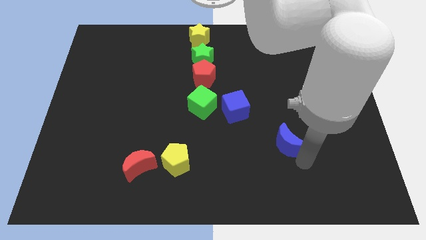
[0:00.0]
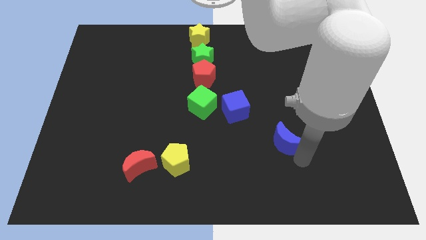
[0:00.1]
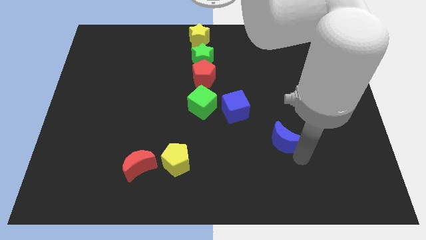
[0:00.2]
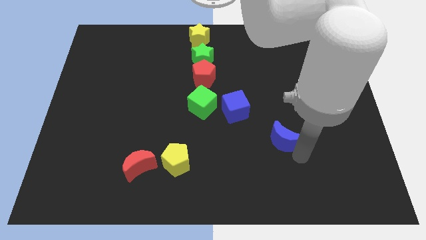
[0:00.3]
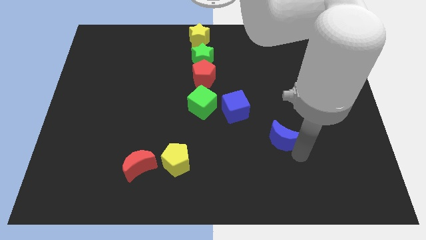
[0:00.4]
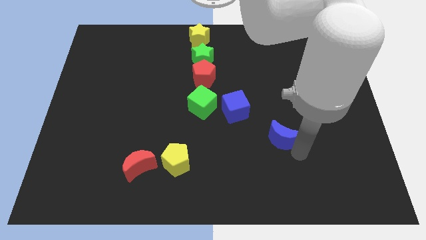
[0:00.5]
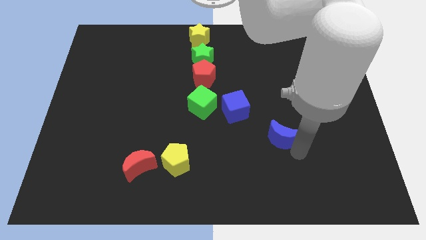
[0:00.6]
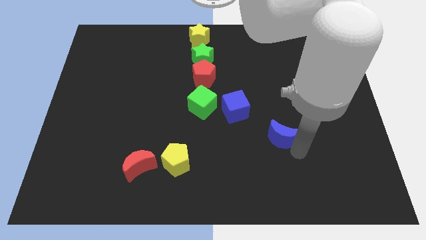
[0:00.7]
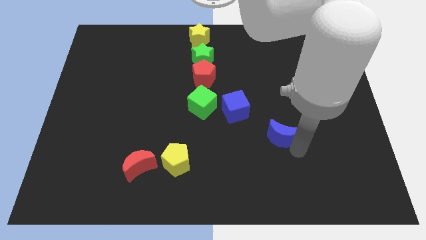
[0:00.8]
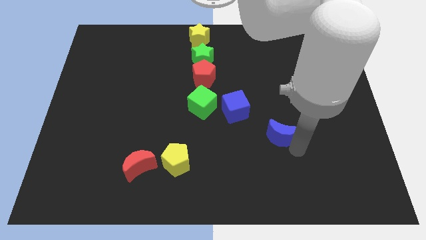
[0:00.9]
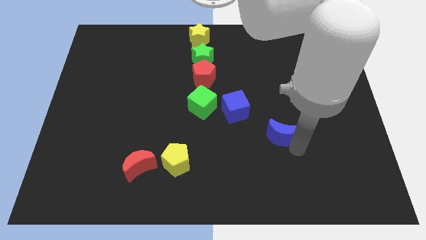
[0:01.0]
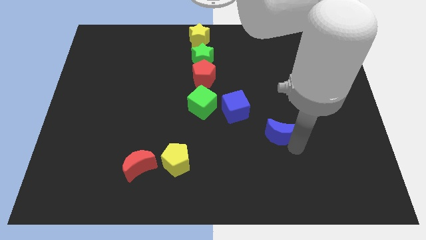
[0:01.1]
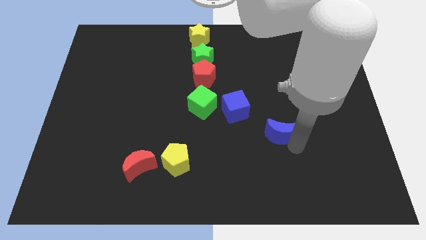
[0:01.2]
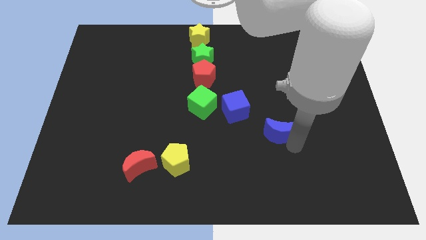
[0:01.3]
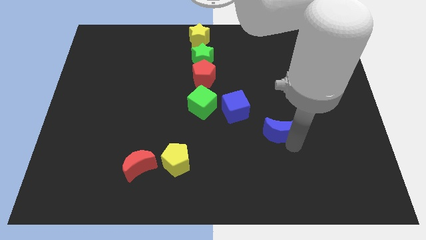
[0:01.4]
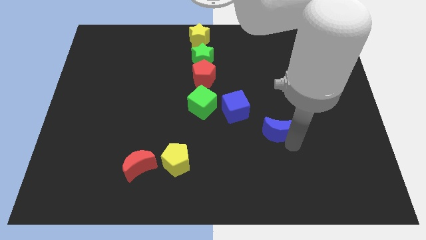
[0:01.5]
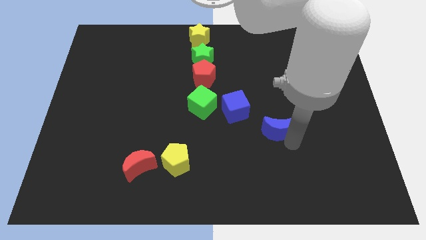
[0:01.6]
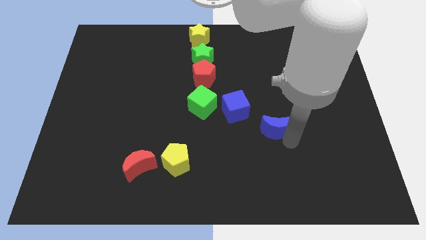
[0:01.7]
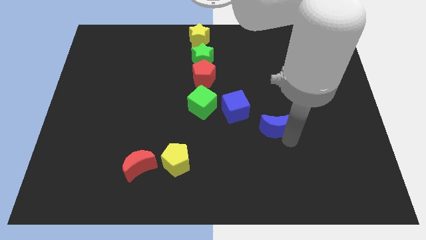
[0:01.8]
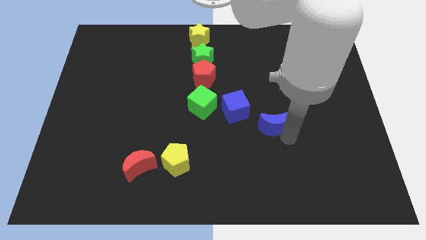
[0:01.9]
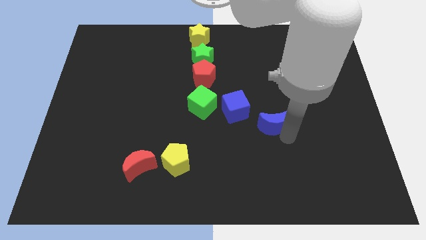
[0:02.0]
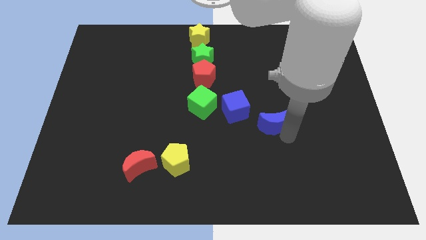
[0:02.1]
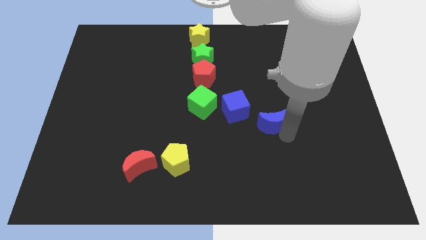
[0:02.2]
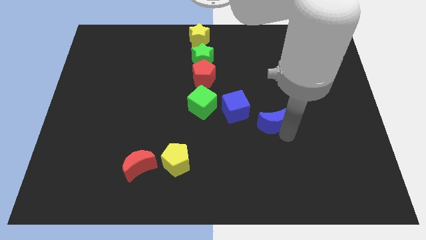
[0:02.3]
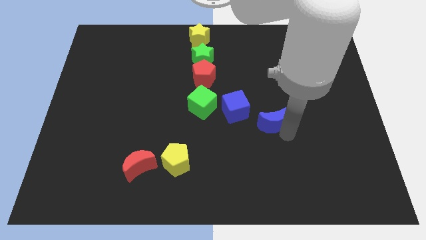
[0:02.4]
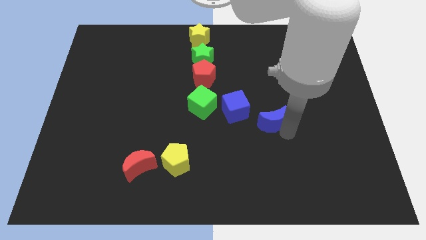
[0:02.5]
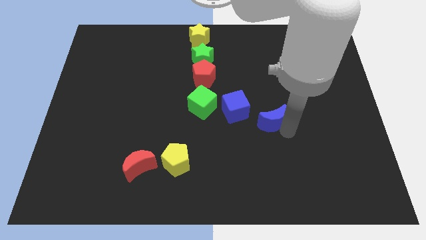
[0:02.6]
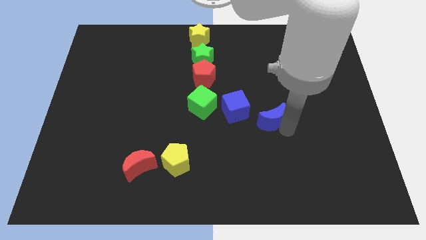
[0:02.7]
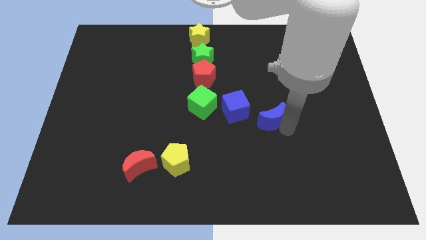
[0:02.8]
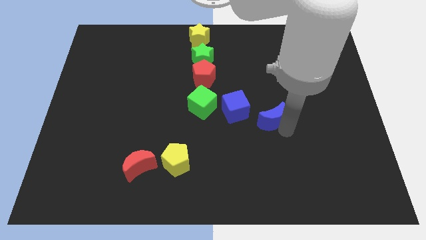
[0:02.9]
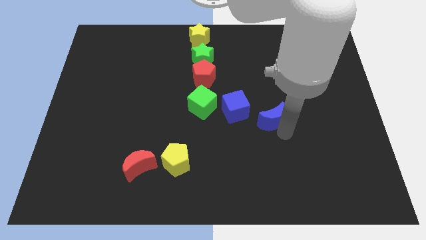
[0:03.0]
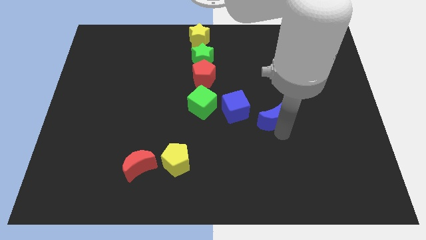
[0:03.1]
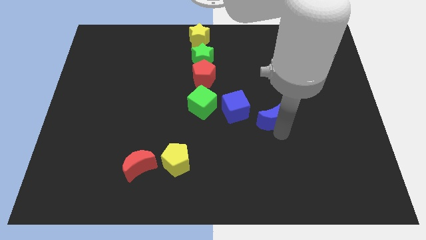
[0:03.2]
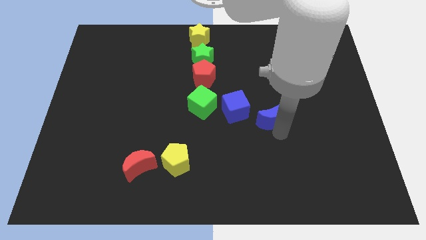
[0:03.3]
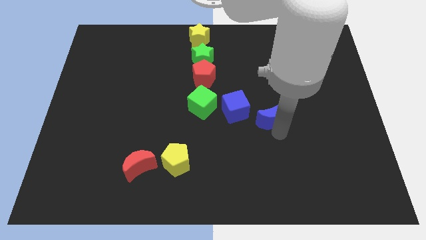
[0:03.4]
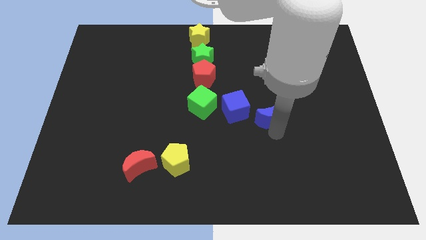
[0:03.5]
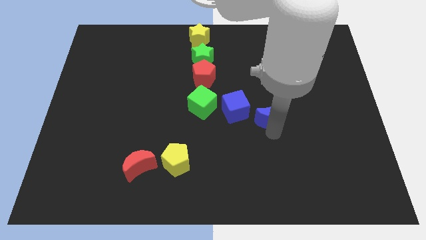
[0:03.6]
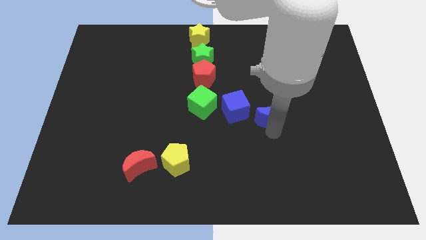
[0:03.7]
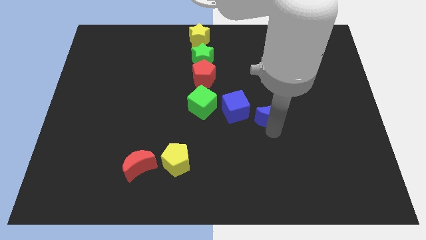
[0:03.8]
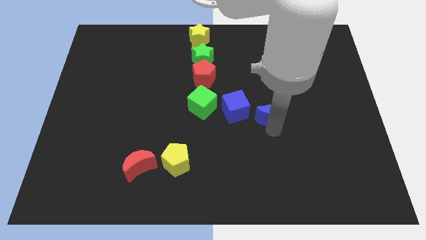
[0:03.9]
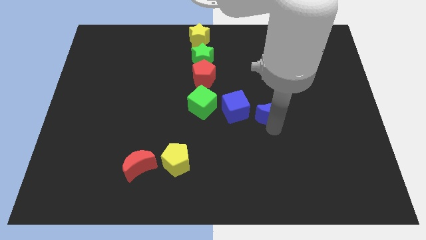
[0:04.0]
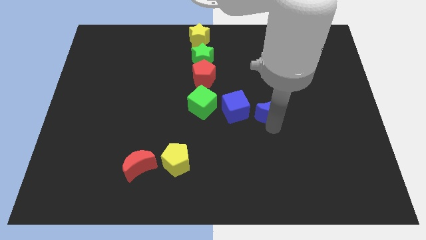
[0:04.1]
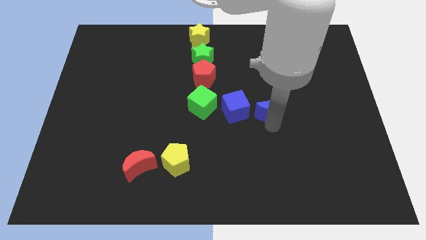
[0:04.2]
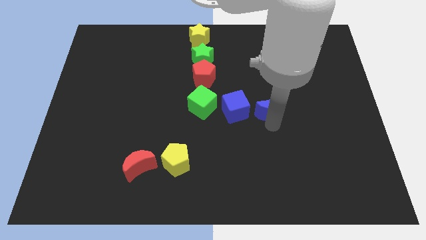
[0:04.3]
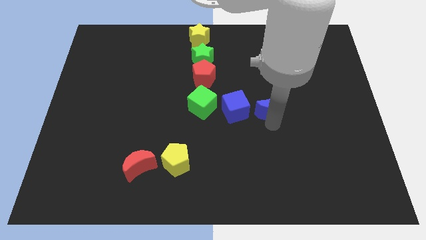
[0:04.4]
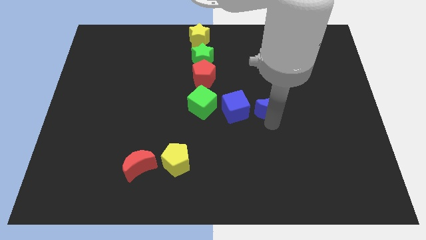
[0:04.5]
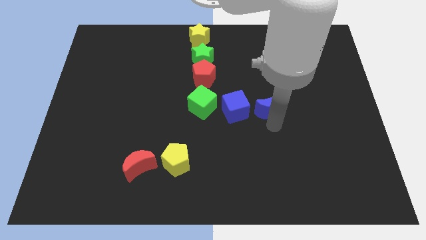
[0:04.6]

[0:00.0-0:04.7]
drag the blue moon and place it next to the blue cube

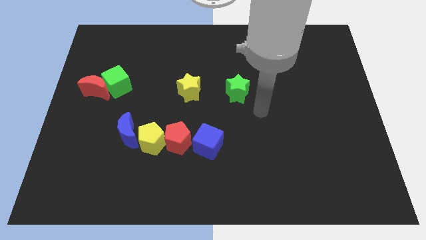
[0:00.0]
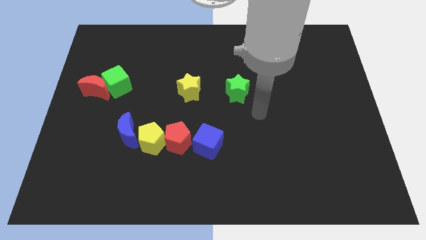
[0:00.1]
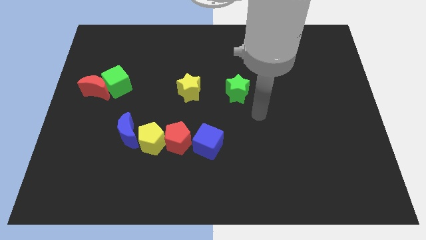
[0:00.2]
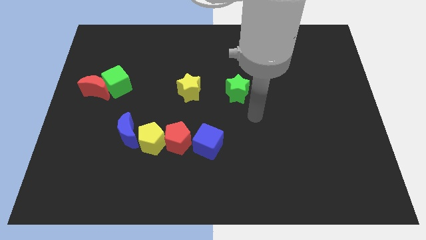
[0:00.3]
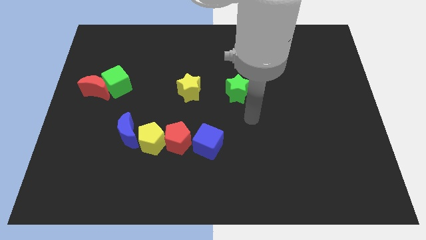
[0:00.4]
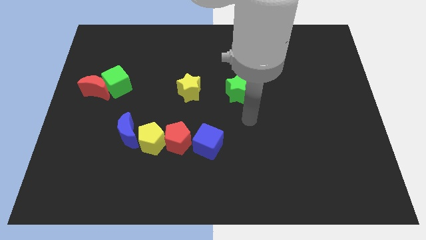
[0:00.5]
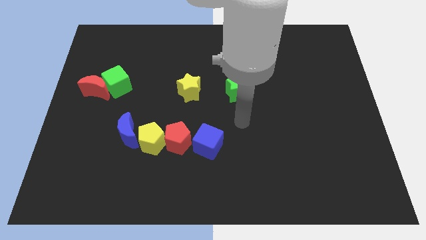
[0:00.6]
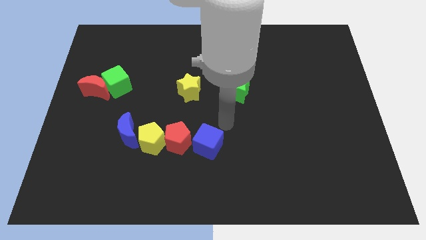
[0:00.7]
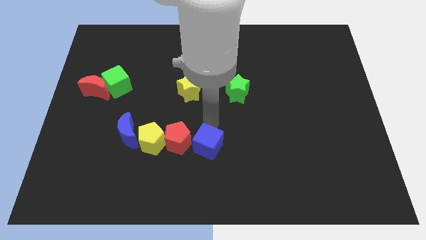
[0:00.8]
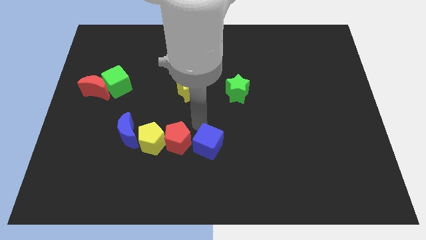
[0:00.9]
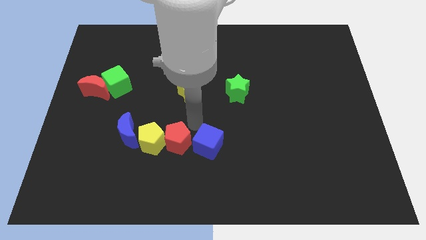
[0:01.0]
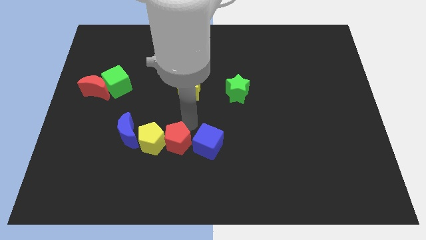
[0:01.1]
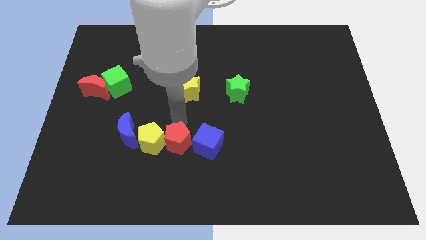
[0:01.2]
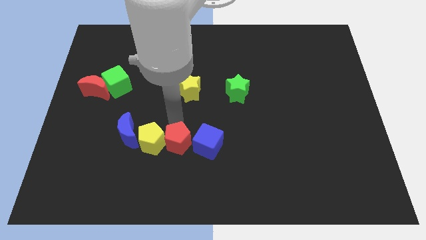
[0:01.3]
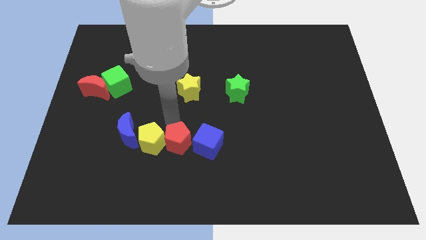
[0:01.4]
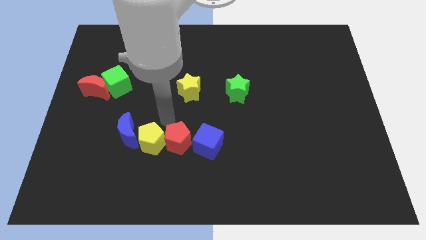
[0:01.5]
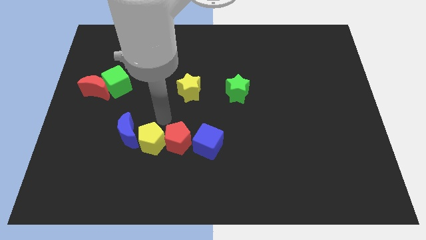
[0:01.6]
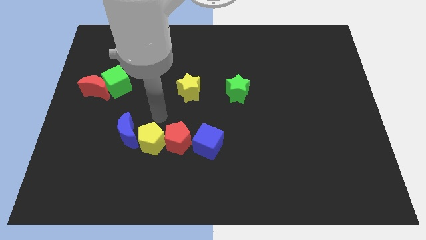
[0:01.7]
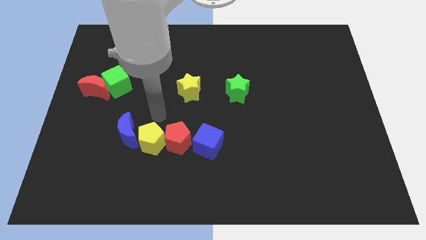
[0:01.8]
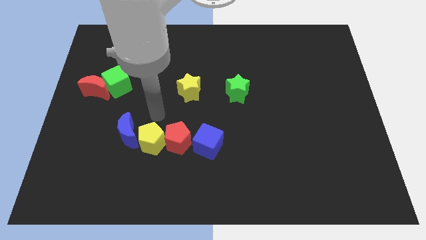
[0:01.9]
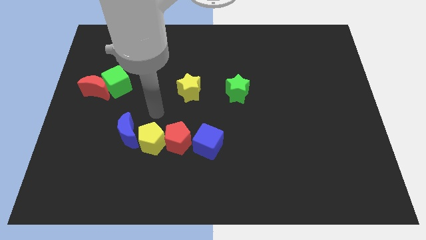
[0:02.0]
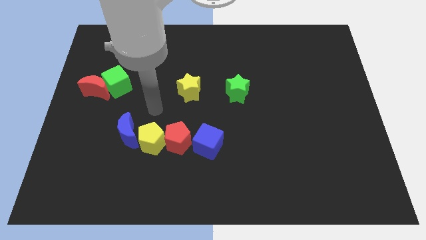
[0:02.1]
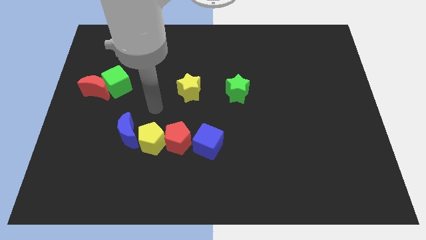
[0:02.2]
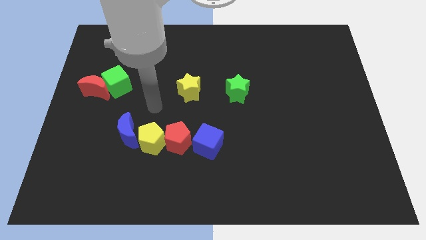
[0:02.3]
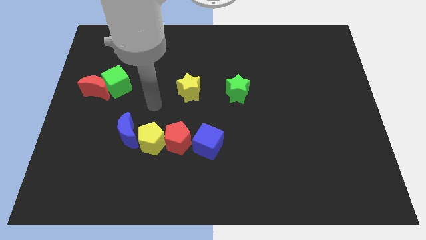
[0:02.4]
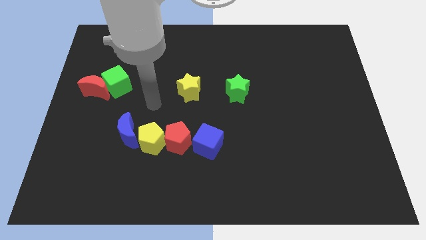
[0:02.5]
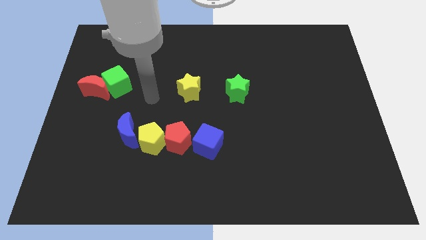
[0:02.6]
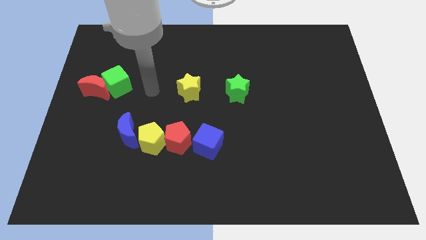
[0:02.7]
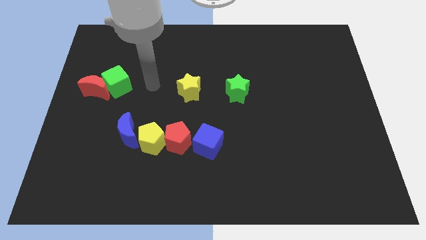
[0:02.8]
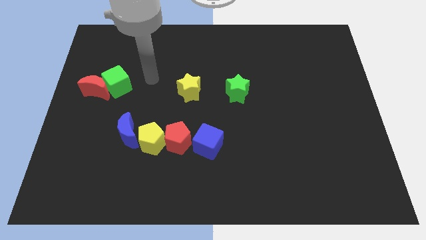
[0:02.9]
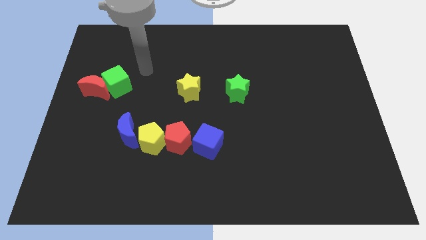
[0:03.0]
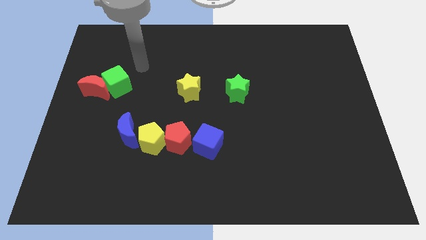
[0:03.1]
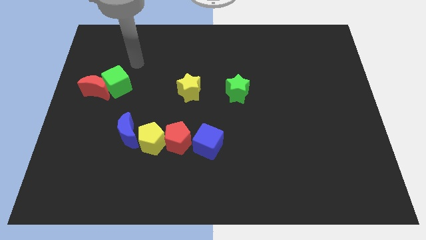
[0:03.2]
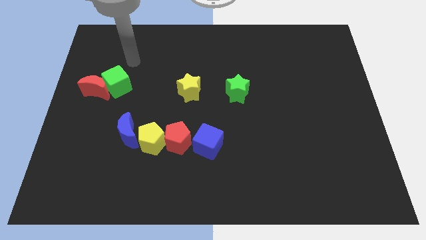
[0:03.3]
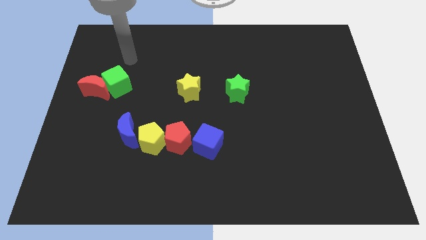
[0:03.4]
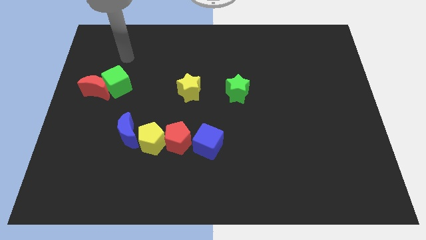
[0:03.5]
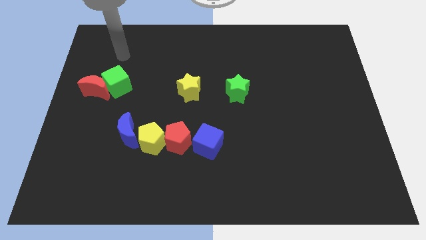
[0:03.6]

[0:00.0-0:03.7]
move the arm to the top of the green cube

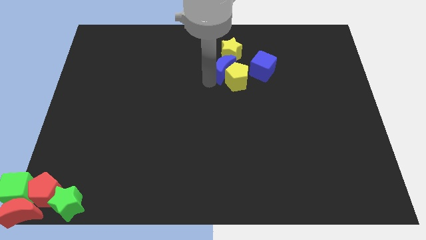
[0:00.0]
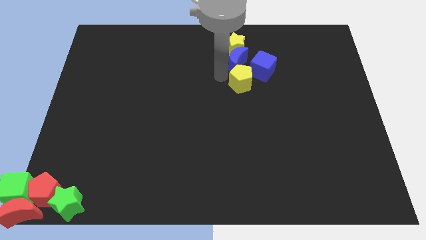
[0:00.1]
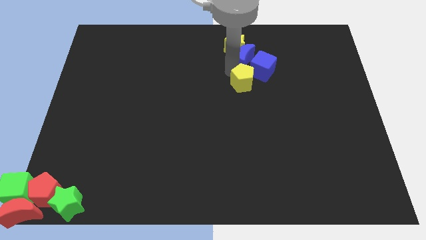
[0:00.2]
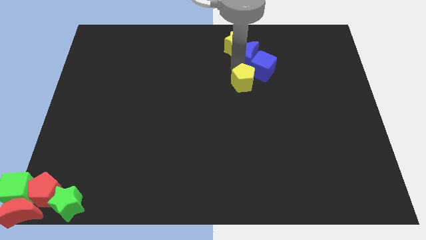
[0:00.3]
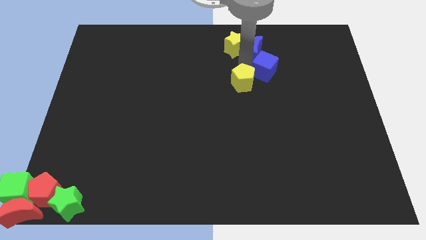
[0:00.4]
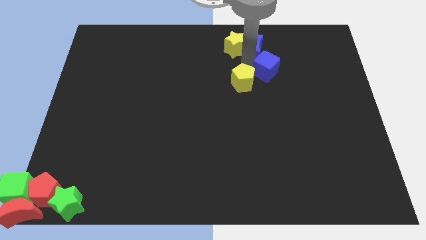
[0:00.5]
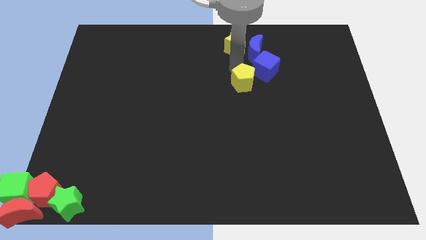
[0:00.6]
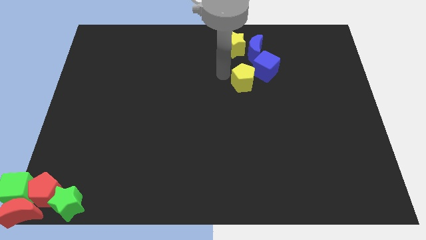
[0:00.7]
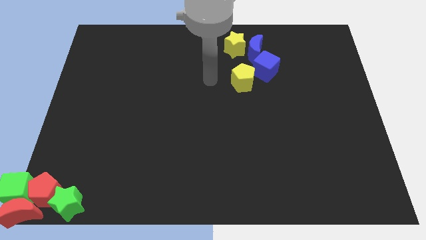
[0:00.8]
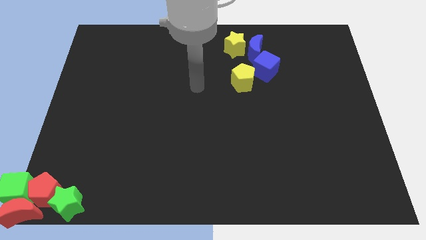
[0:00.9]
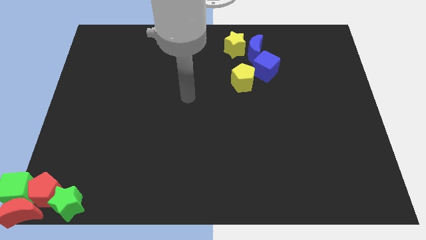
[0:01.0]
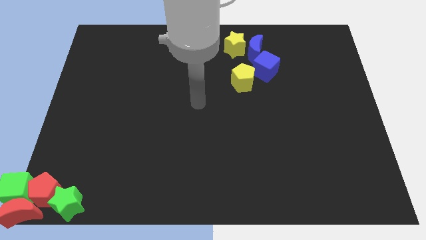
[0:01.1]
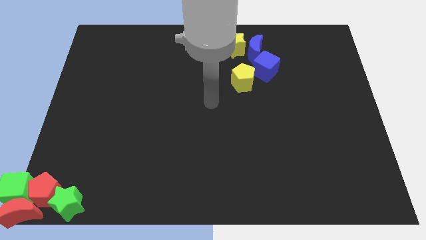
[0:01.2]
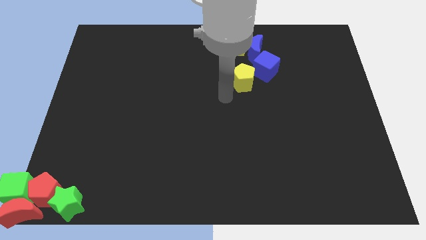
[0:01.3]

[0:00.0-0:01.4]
move the blue moon to the top side of the blue cube
